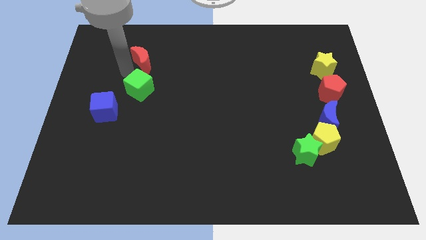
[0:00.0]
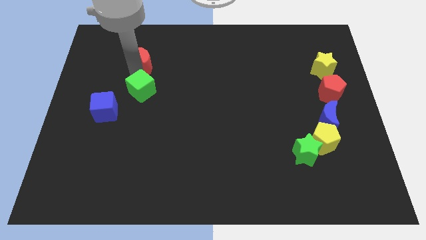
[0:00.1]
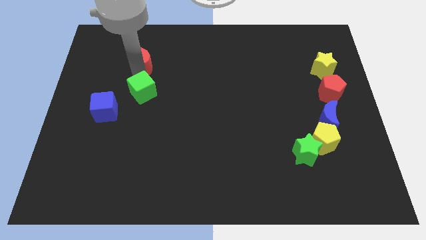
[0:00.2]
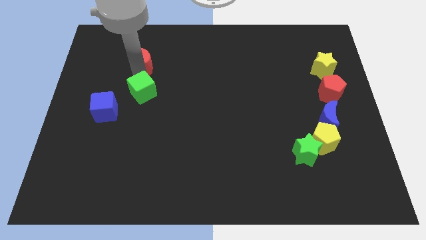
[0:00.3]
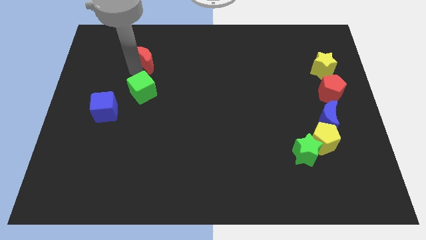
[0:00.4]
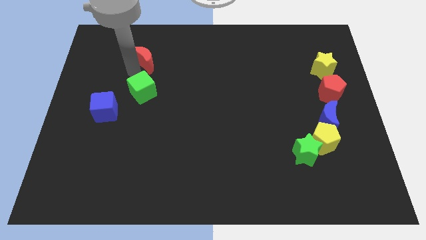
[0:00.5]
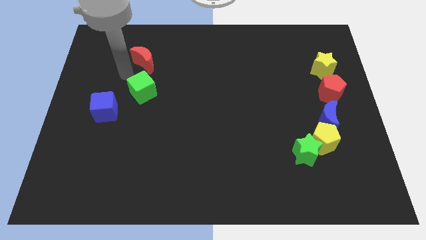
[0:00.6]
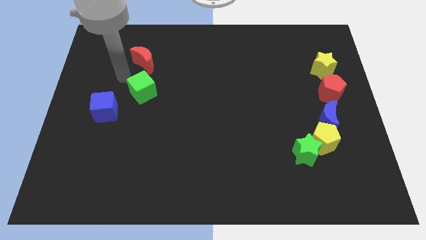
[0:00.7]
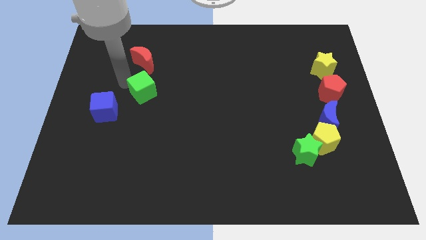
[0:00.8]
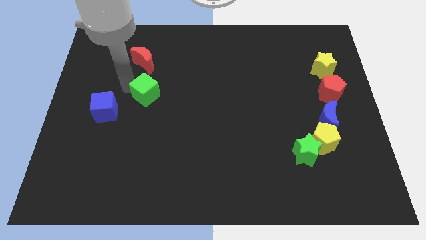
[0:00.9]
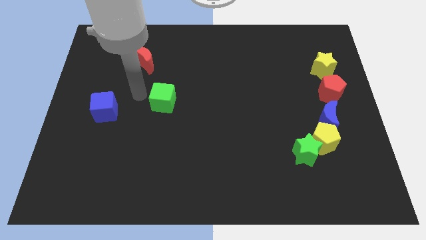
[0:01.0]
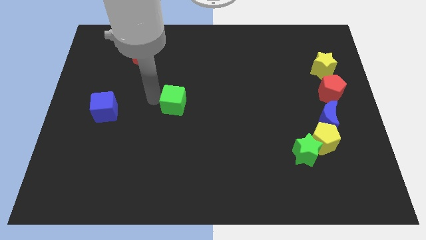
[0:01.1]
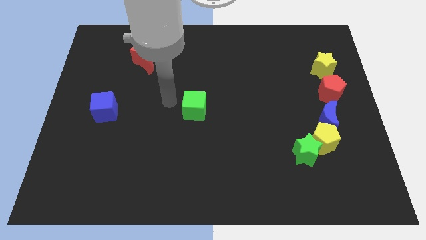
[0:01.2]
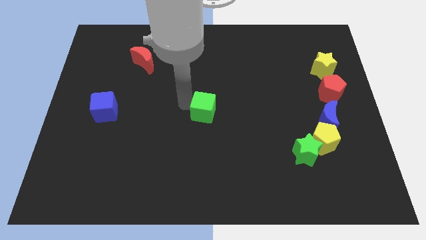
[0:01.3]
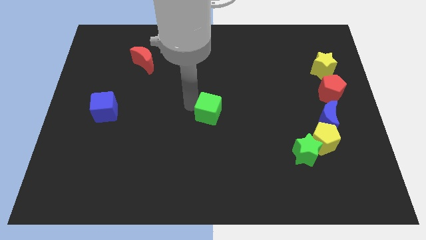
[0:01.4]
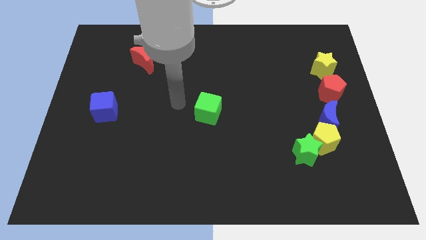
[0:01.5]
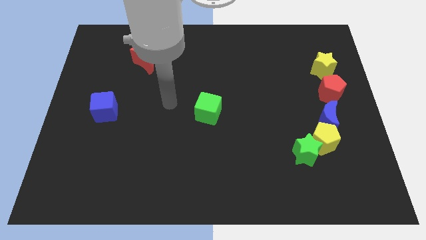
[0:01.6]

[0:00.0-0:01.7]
place the green cube at the center of the board

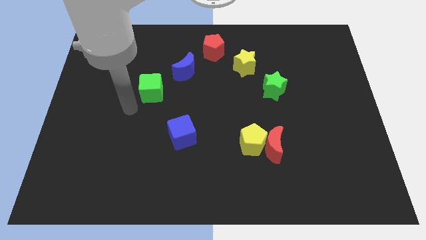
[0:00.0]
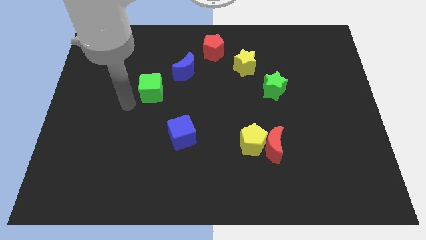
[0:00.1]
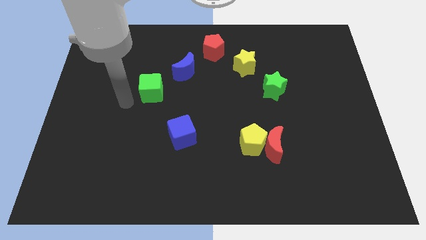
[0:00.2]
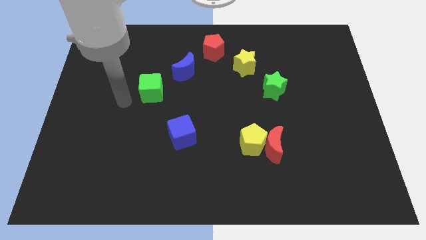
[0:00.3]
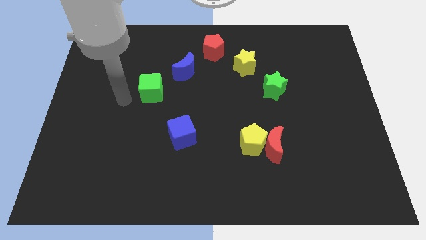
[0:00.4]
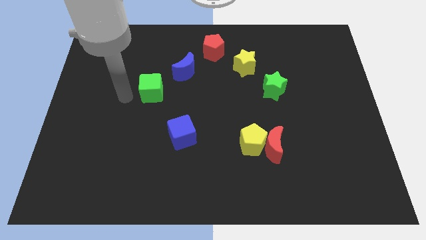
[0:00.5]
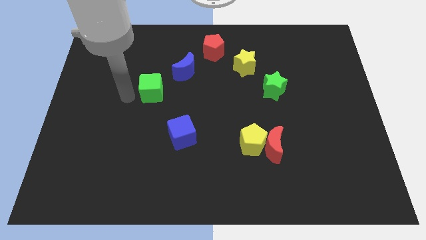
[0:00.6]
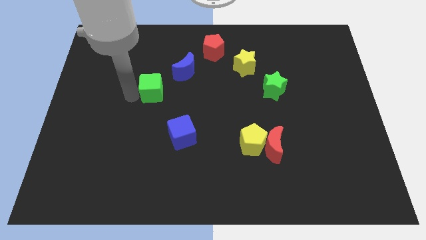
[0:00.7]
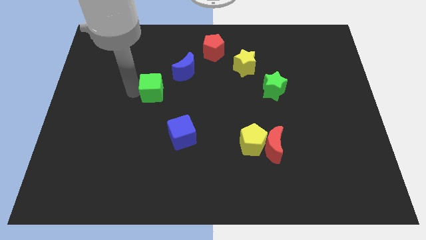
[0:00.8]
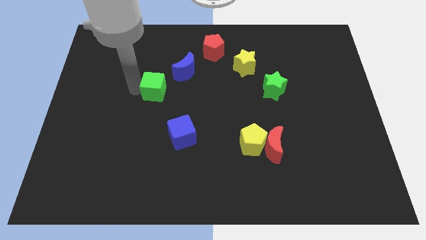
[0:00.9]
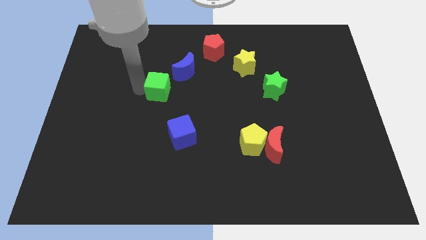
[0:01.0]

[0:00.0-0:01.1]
slightly push the green cube towards the blue crescent

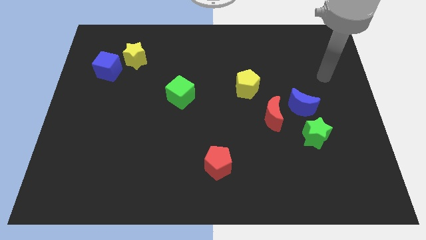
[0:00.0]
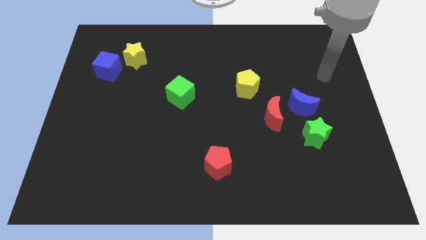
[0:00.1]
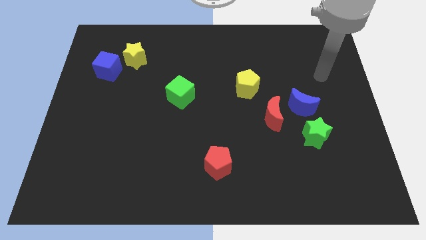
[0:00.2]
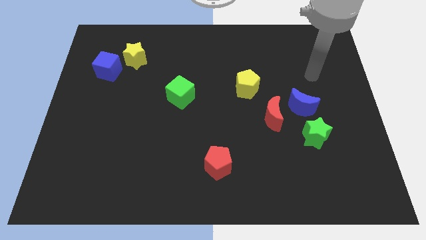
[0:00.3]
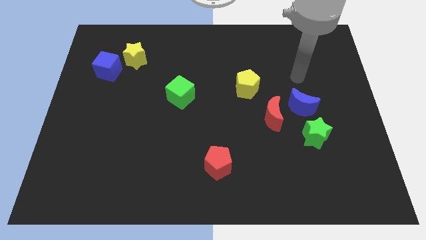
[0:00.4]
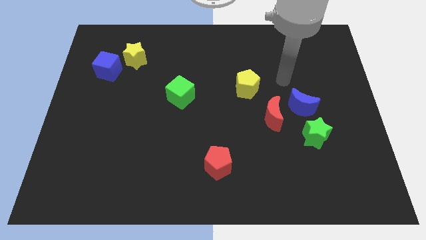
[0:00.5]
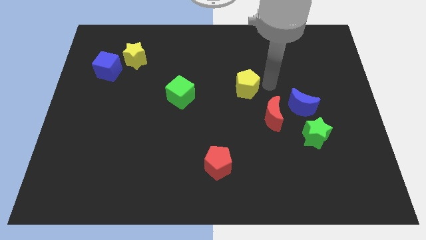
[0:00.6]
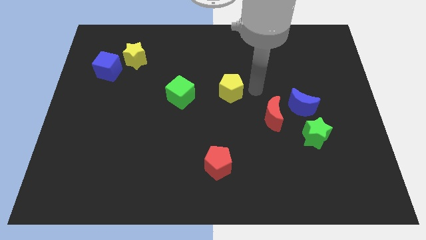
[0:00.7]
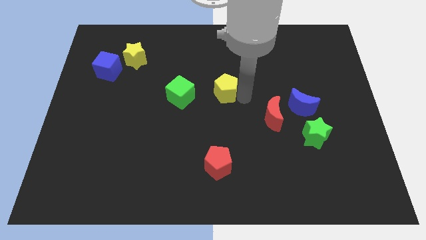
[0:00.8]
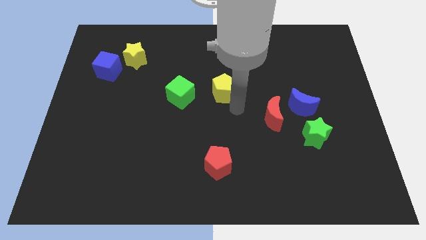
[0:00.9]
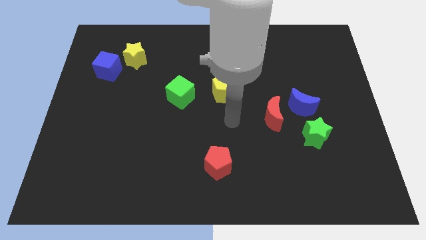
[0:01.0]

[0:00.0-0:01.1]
push the yellow pentagon towards the green cube

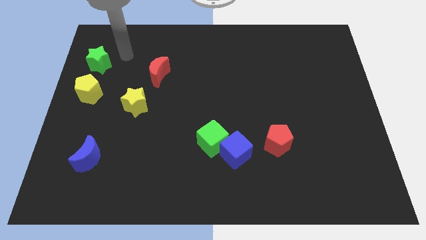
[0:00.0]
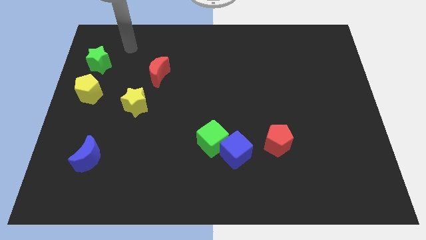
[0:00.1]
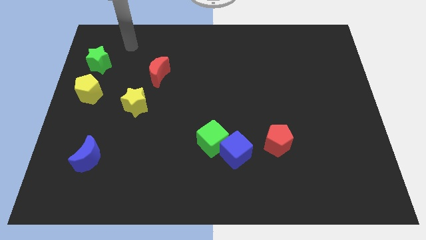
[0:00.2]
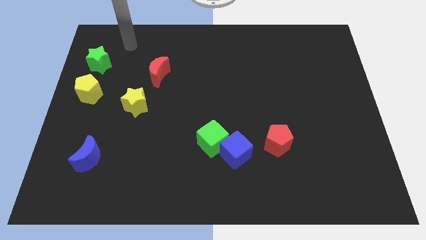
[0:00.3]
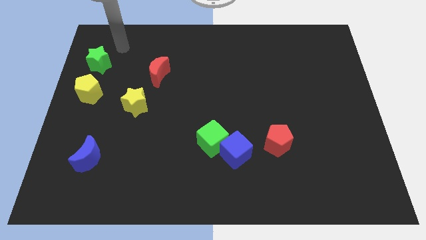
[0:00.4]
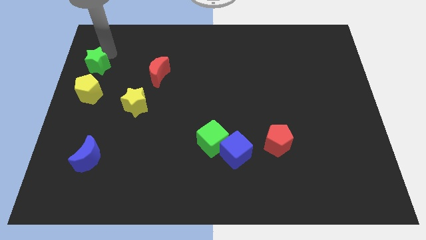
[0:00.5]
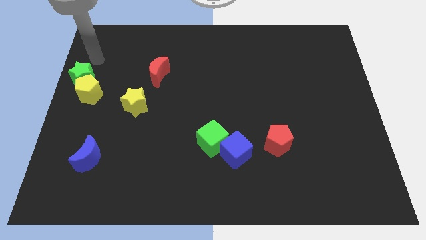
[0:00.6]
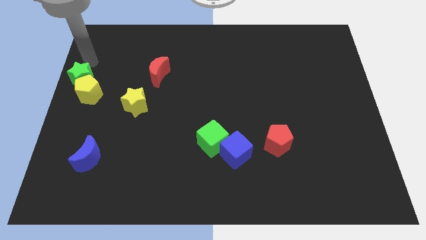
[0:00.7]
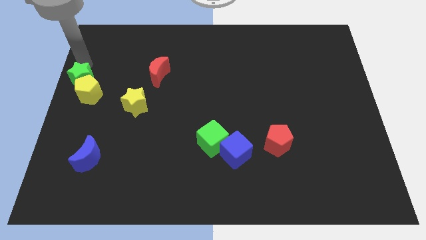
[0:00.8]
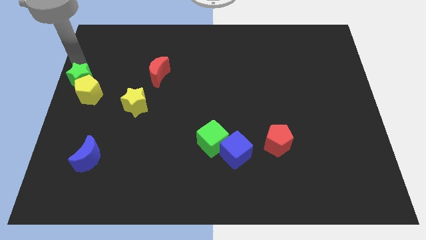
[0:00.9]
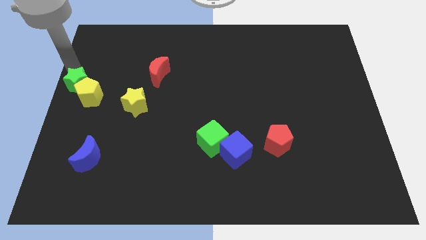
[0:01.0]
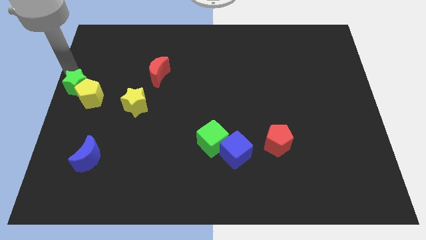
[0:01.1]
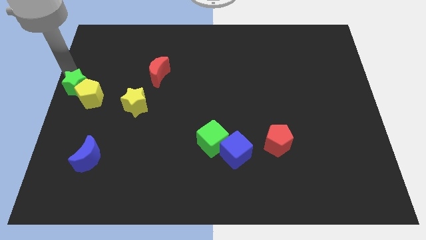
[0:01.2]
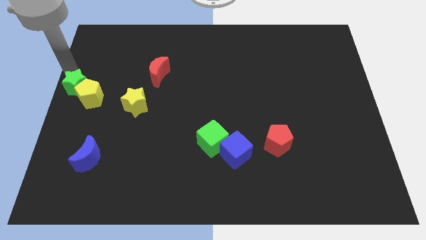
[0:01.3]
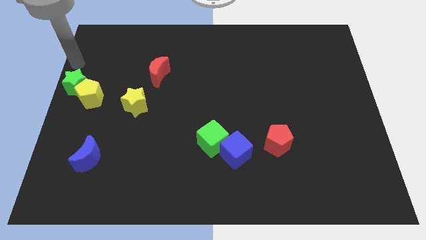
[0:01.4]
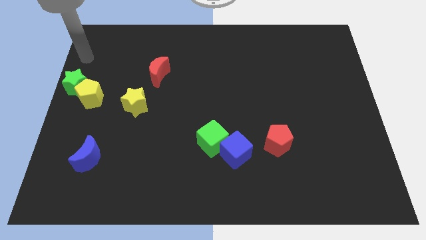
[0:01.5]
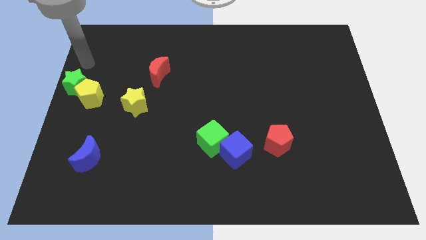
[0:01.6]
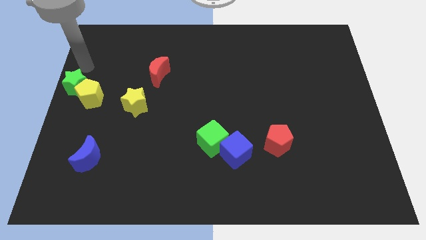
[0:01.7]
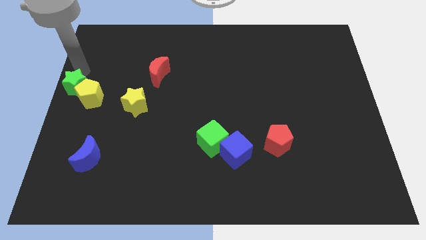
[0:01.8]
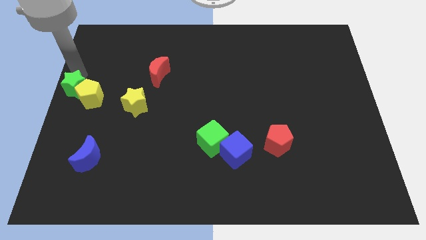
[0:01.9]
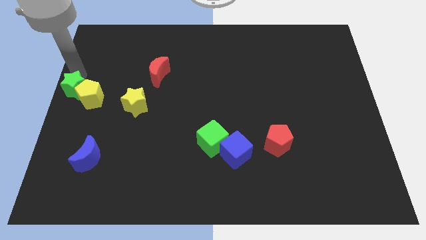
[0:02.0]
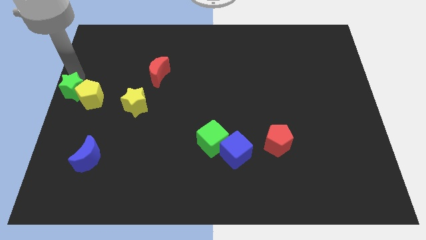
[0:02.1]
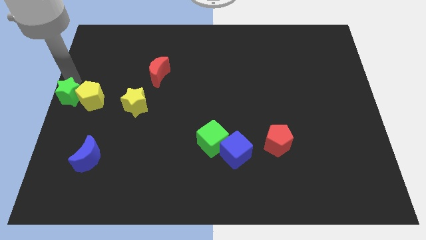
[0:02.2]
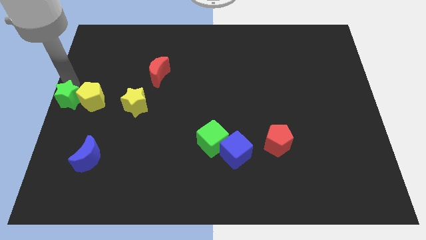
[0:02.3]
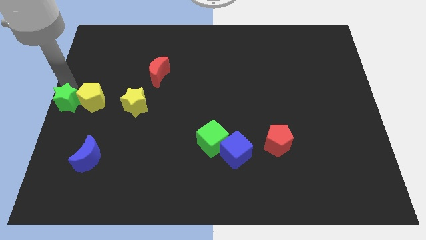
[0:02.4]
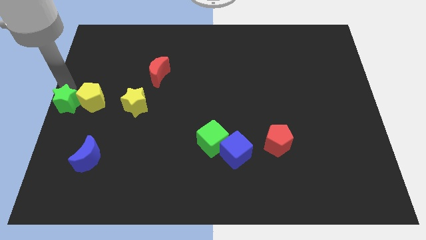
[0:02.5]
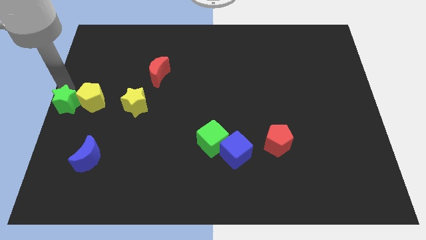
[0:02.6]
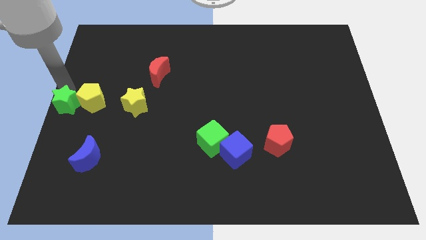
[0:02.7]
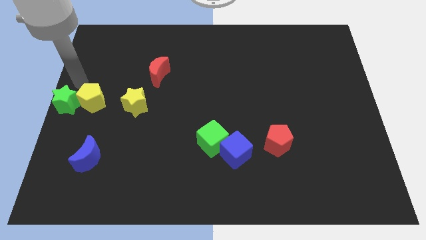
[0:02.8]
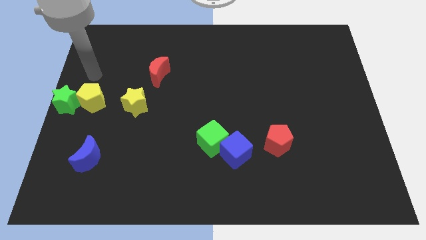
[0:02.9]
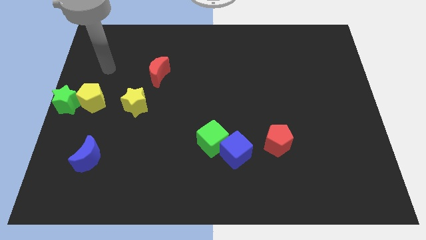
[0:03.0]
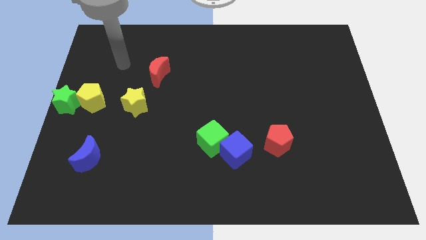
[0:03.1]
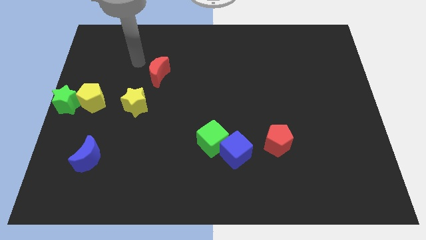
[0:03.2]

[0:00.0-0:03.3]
move the green star to the left side of the yellow pentagon

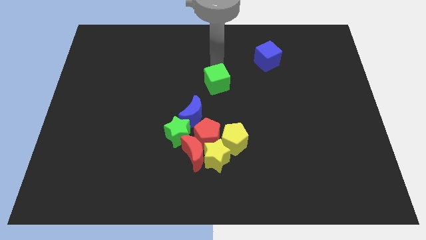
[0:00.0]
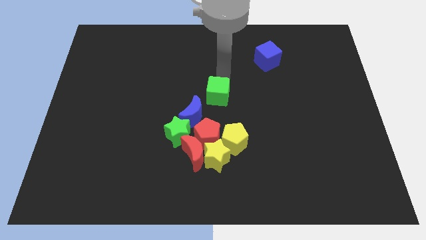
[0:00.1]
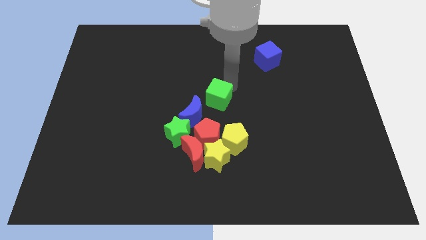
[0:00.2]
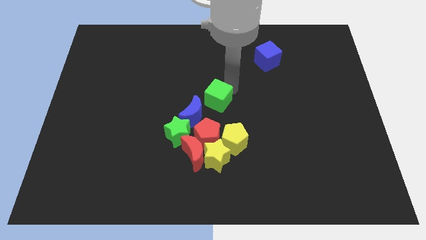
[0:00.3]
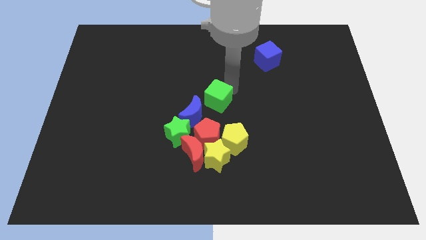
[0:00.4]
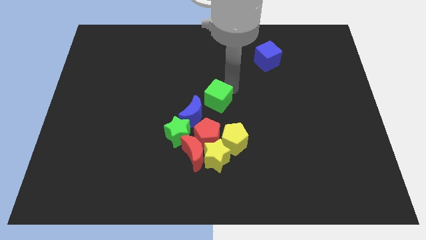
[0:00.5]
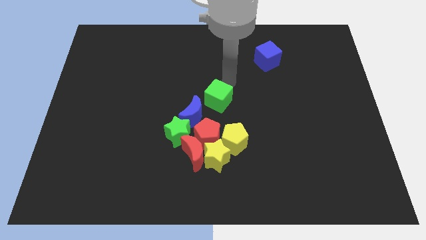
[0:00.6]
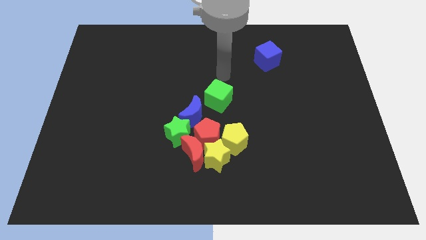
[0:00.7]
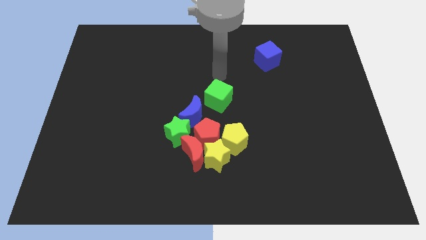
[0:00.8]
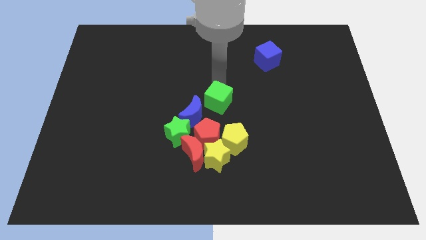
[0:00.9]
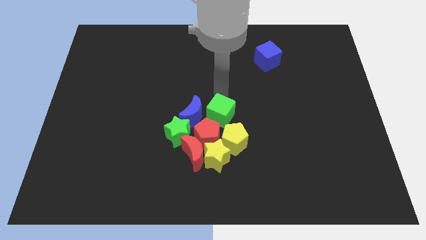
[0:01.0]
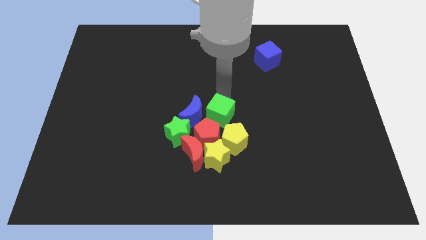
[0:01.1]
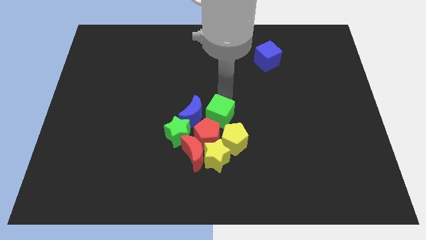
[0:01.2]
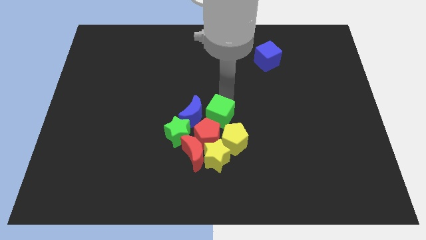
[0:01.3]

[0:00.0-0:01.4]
place green cube to the top of red pentagon

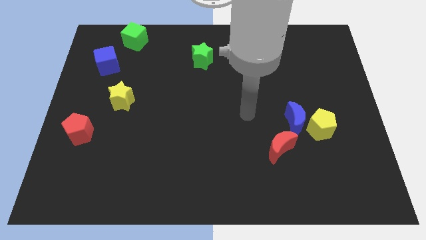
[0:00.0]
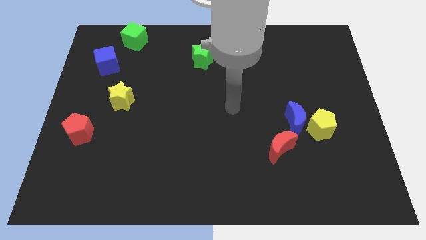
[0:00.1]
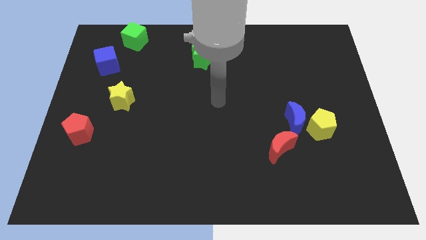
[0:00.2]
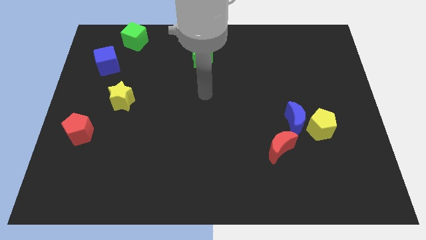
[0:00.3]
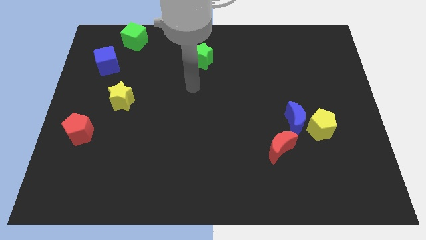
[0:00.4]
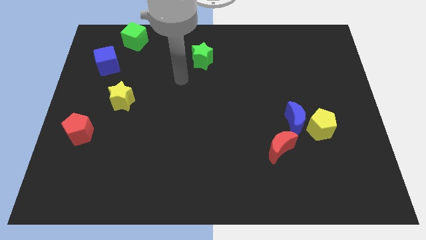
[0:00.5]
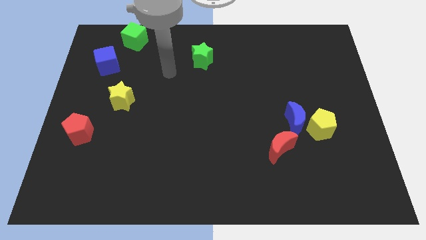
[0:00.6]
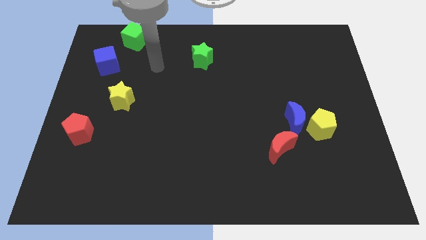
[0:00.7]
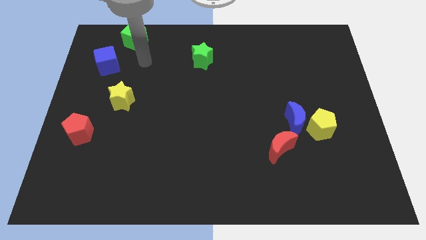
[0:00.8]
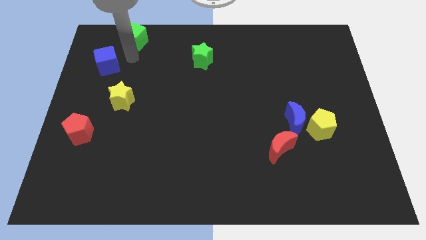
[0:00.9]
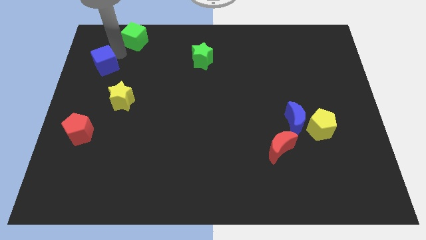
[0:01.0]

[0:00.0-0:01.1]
tap on the top right side of blue cube
